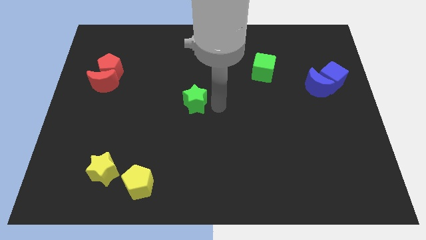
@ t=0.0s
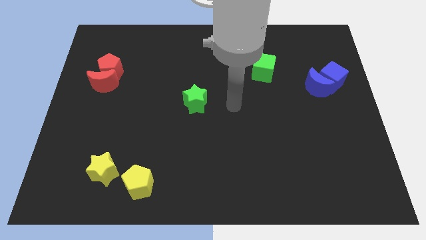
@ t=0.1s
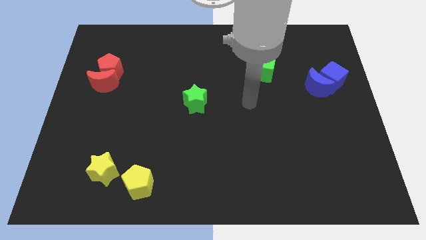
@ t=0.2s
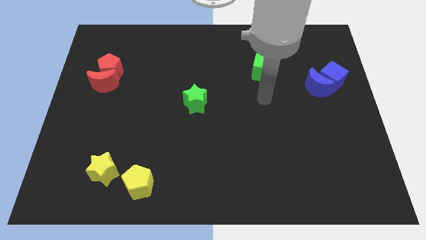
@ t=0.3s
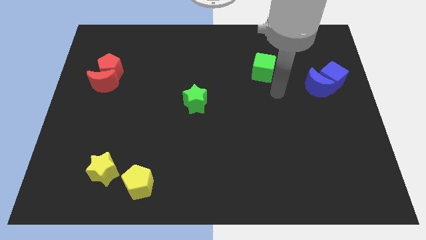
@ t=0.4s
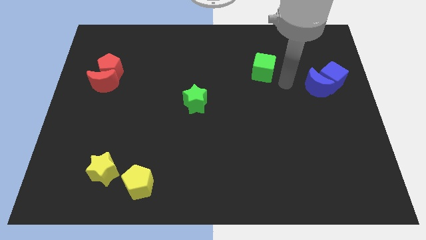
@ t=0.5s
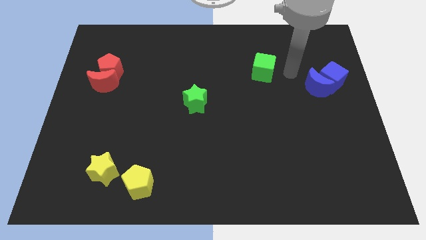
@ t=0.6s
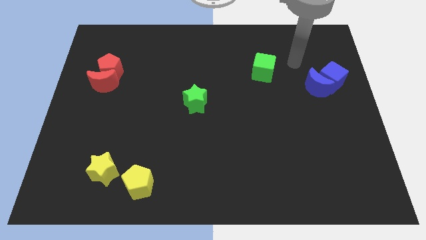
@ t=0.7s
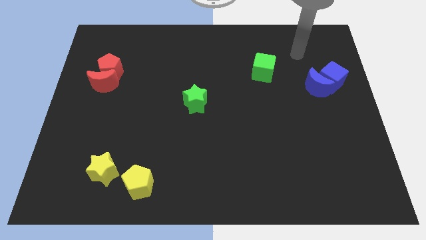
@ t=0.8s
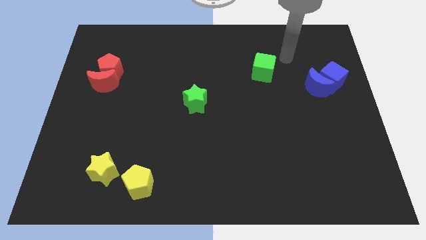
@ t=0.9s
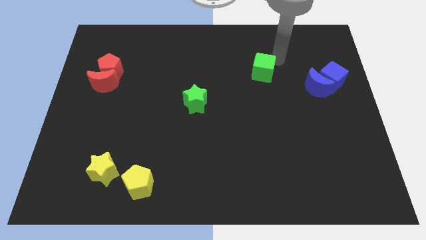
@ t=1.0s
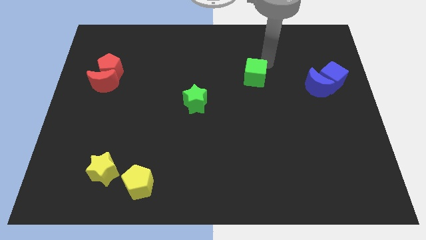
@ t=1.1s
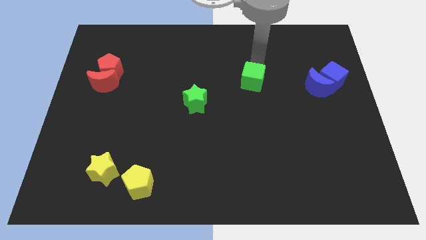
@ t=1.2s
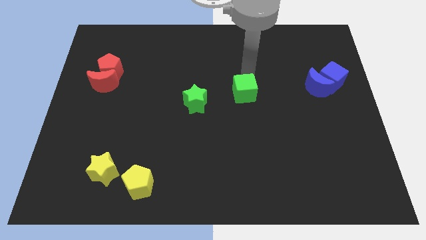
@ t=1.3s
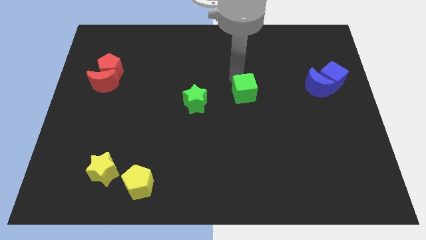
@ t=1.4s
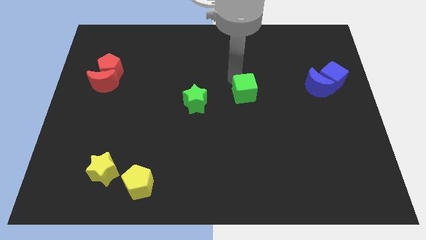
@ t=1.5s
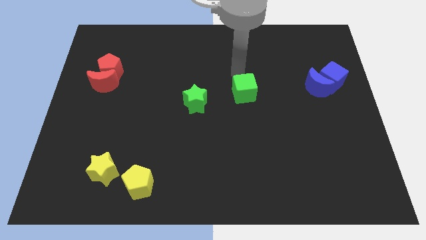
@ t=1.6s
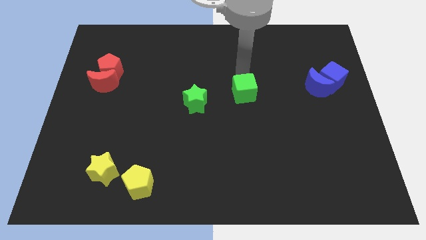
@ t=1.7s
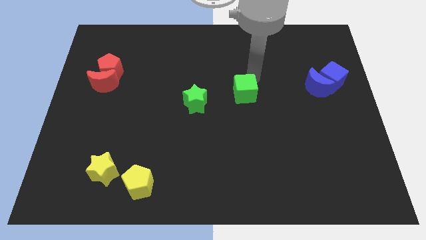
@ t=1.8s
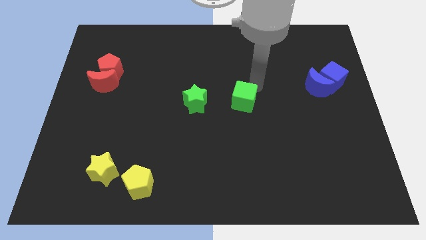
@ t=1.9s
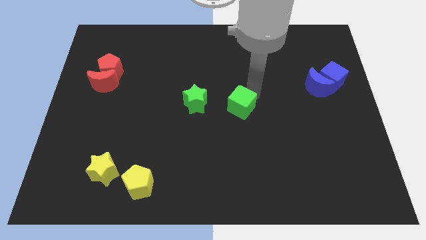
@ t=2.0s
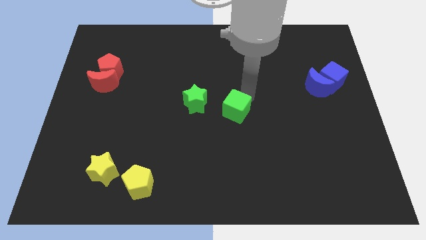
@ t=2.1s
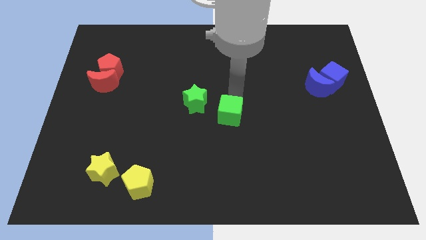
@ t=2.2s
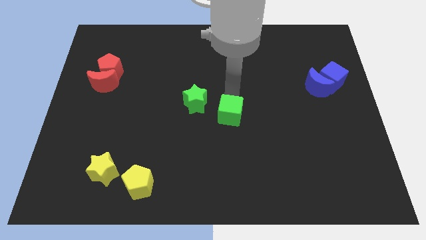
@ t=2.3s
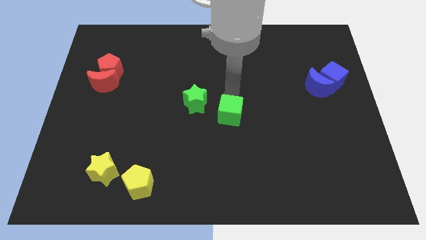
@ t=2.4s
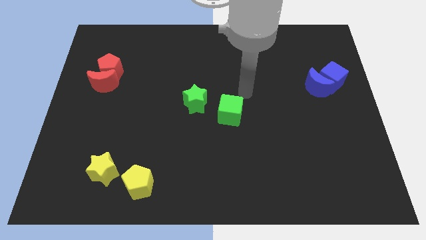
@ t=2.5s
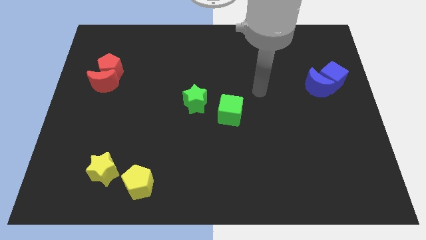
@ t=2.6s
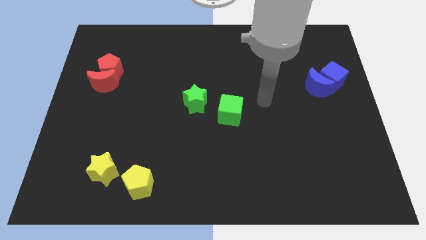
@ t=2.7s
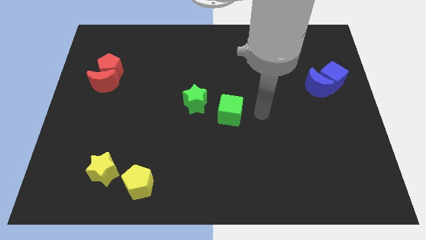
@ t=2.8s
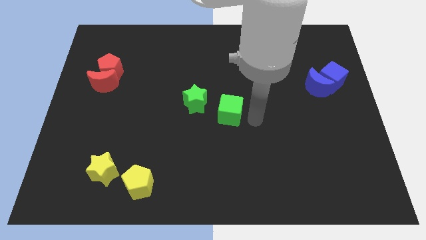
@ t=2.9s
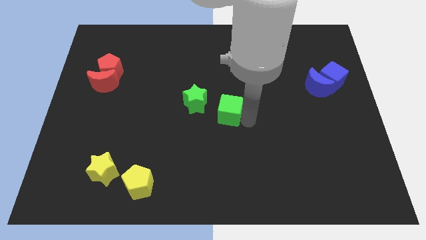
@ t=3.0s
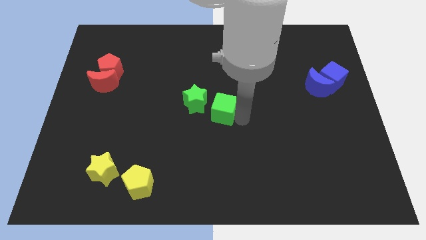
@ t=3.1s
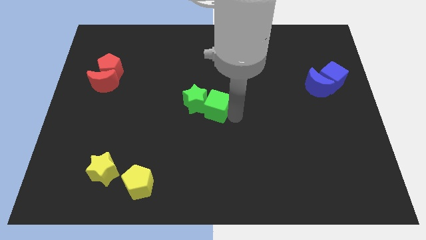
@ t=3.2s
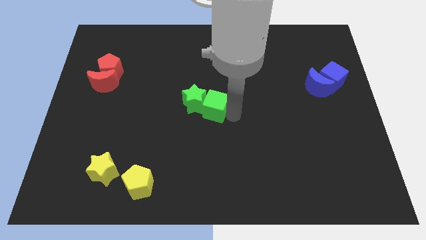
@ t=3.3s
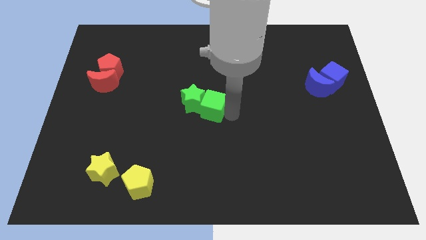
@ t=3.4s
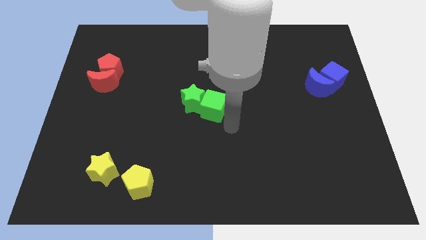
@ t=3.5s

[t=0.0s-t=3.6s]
move the green cube to the right of the green star

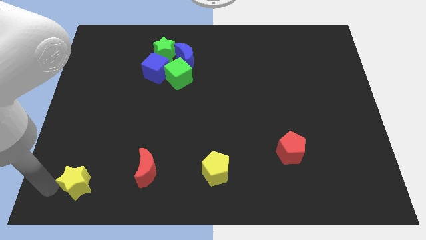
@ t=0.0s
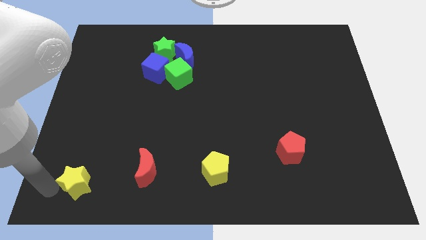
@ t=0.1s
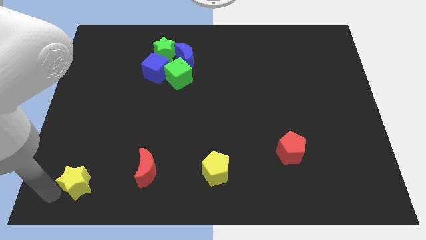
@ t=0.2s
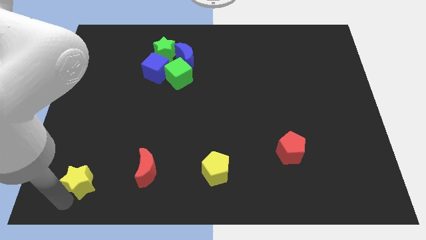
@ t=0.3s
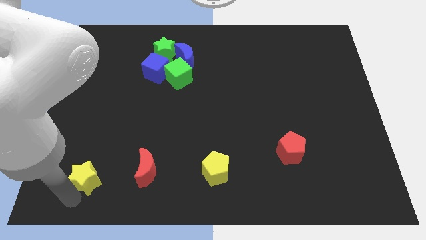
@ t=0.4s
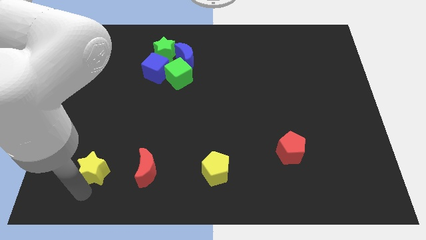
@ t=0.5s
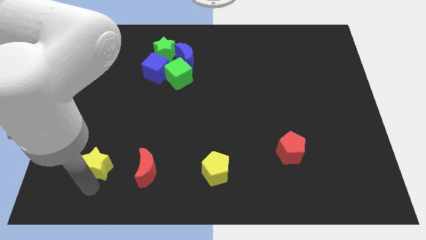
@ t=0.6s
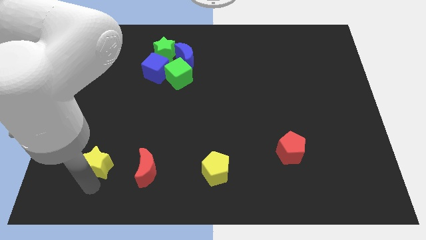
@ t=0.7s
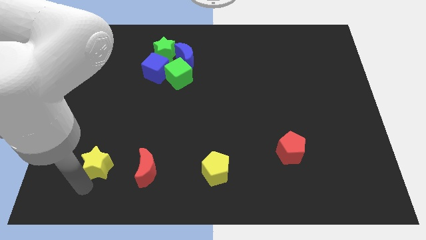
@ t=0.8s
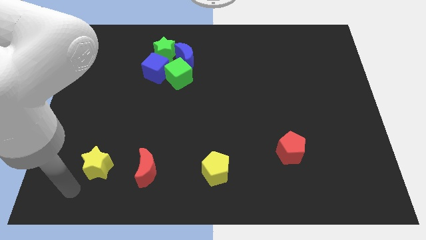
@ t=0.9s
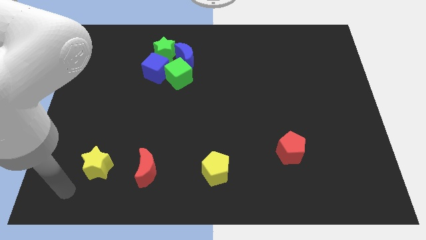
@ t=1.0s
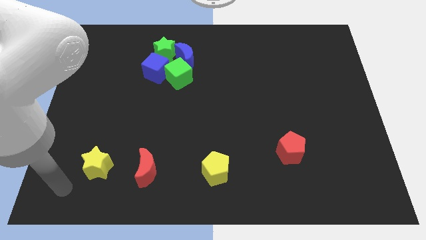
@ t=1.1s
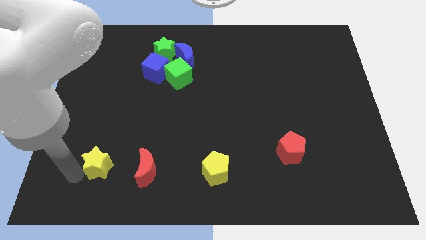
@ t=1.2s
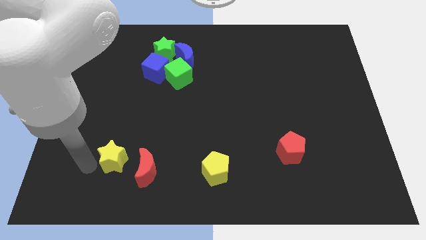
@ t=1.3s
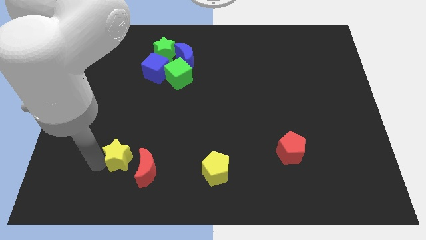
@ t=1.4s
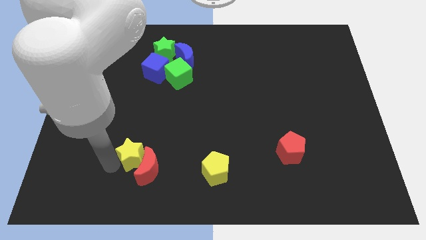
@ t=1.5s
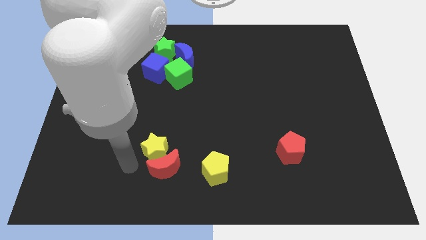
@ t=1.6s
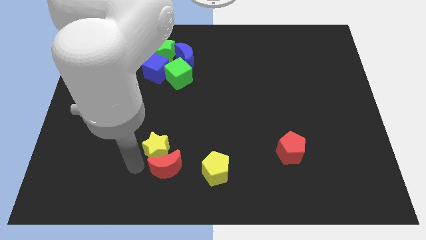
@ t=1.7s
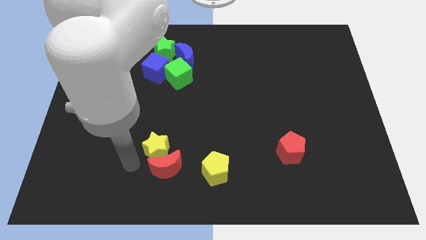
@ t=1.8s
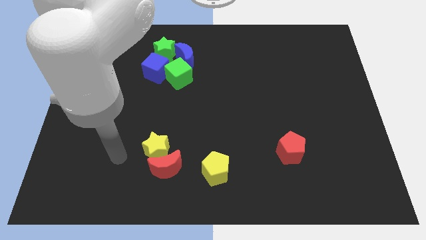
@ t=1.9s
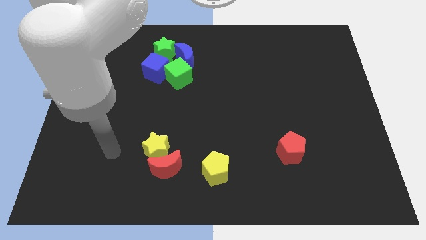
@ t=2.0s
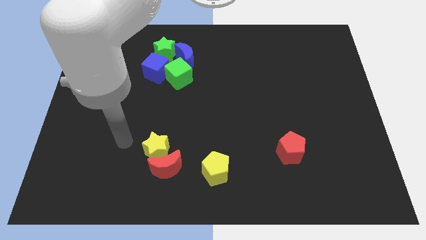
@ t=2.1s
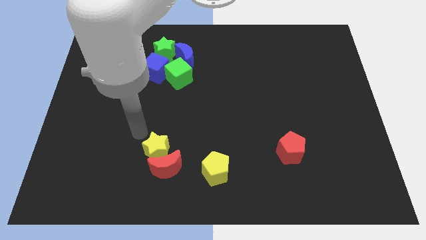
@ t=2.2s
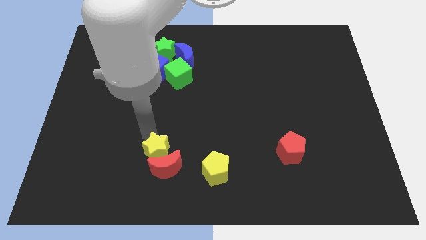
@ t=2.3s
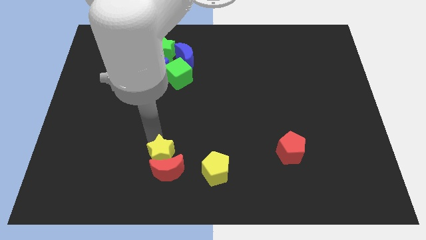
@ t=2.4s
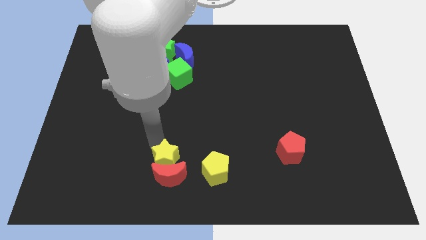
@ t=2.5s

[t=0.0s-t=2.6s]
push yellow star slightly down

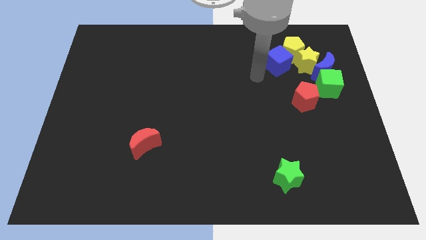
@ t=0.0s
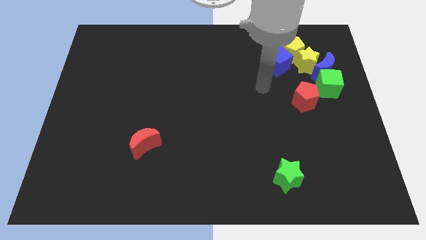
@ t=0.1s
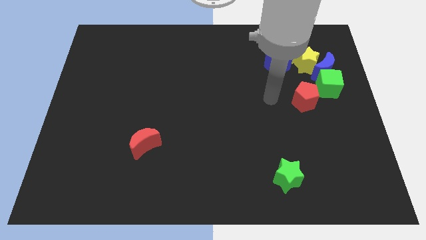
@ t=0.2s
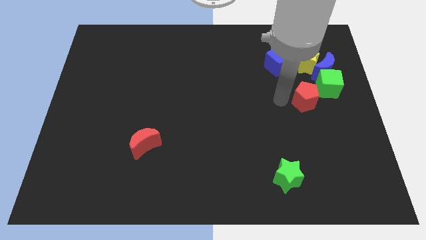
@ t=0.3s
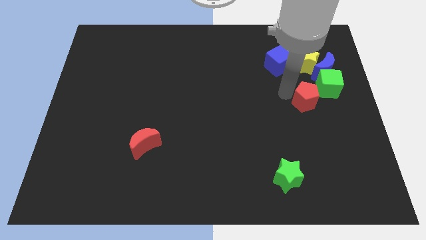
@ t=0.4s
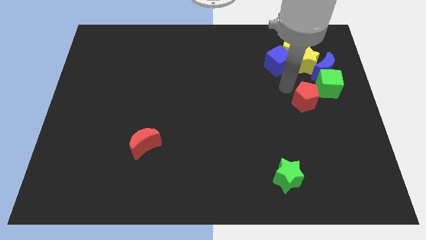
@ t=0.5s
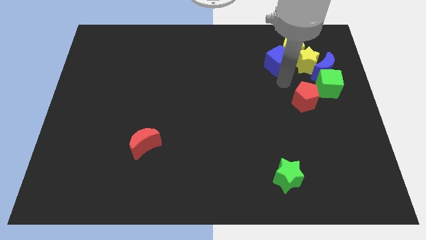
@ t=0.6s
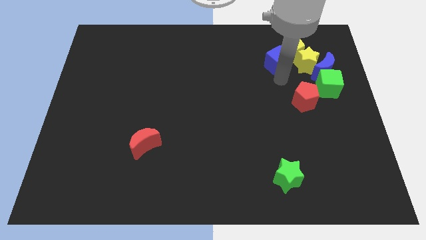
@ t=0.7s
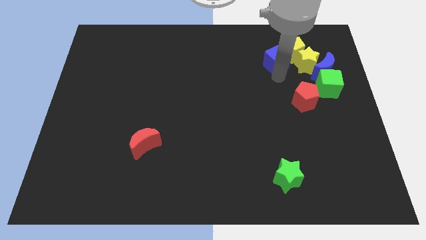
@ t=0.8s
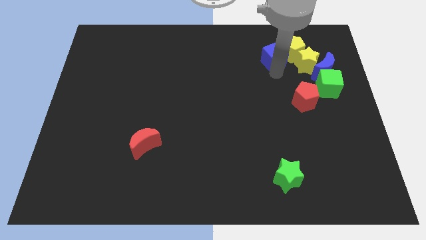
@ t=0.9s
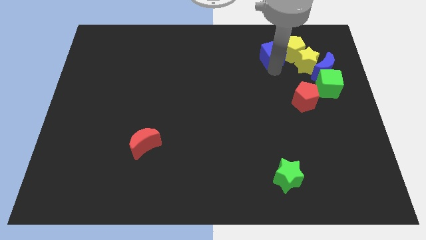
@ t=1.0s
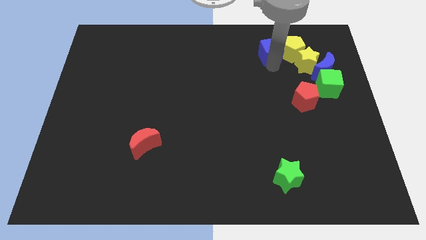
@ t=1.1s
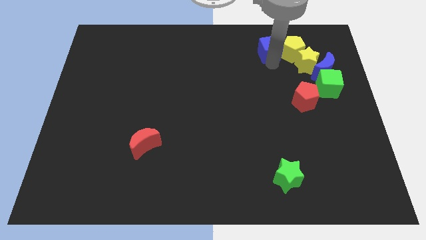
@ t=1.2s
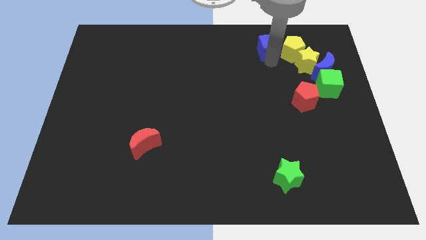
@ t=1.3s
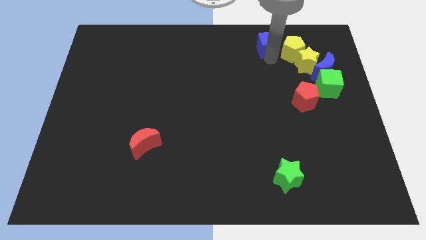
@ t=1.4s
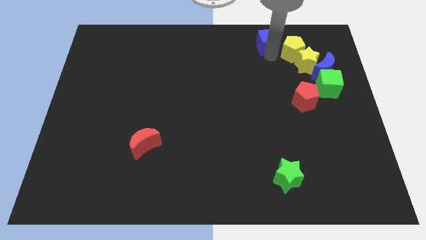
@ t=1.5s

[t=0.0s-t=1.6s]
push the blue cube to the left of the yellow pentagon

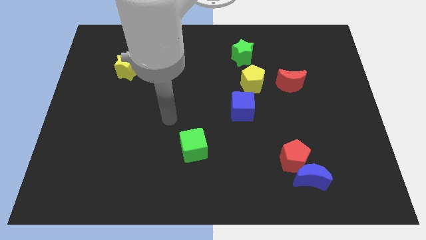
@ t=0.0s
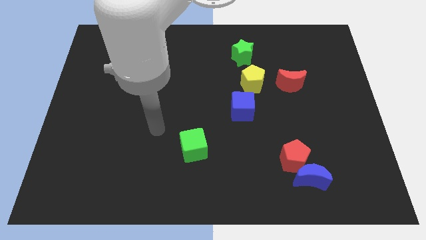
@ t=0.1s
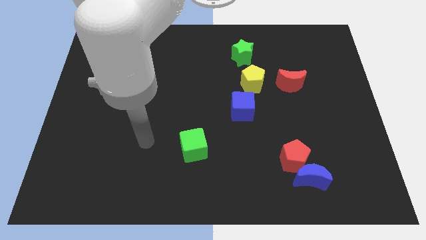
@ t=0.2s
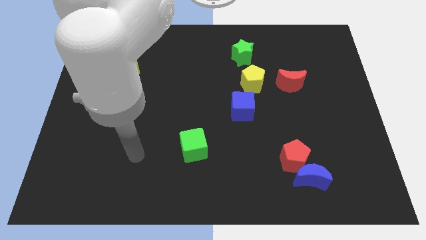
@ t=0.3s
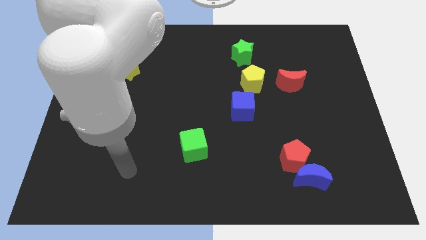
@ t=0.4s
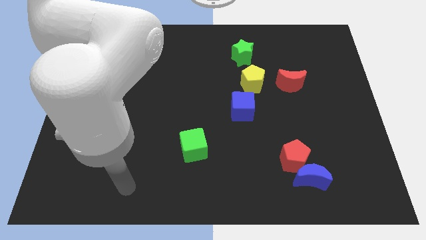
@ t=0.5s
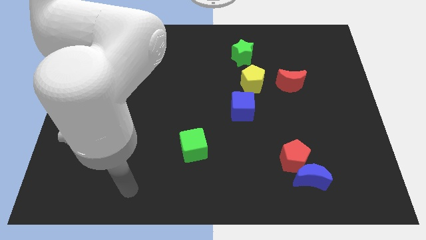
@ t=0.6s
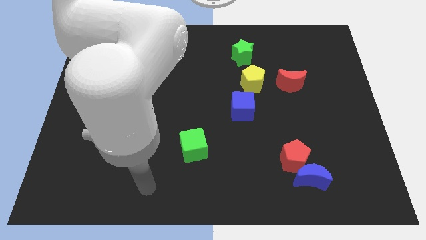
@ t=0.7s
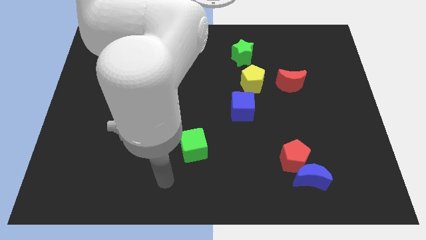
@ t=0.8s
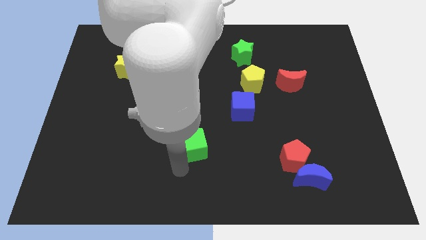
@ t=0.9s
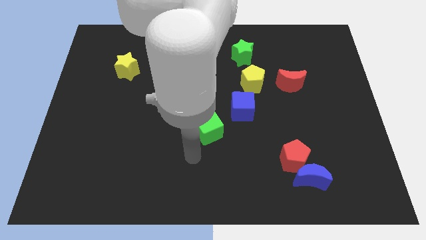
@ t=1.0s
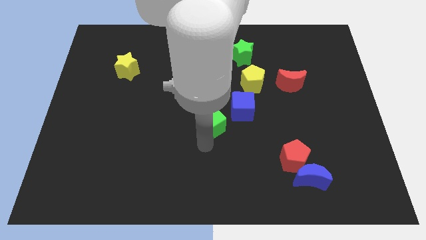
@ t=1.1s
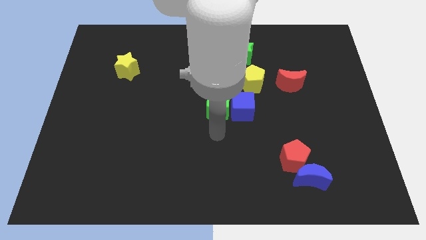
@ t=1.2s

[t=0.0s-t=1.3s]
place the green cube left to the blue cube

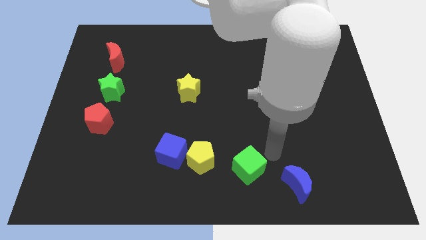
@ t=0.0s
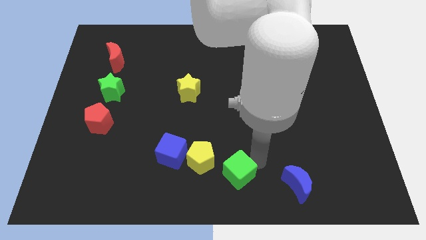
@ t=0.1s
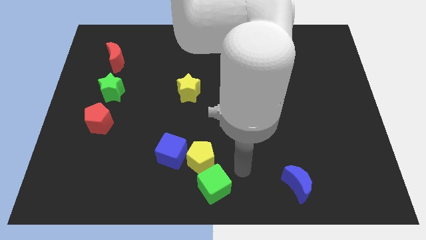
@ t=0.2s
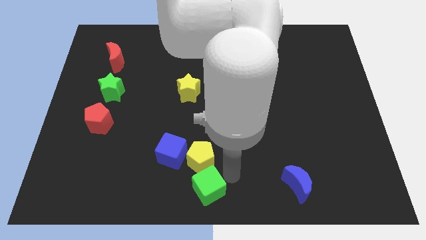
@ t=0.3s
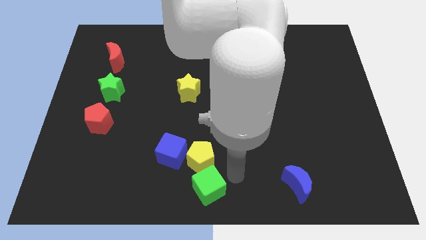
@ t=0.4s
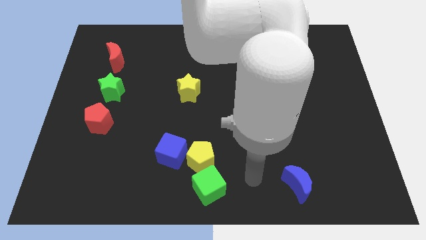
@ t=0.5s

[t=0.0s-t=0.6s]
push the green cube towards the bottom center of the board
